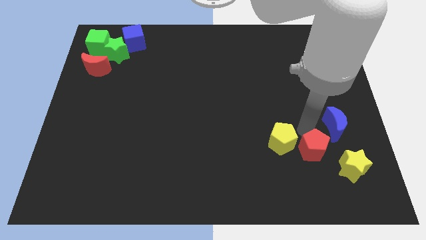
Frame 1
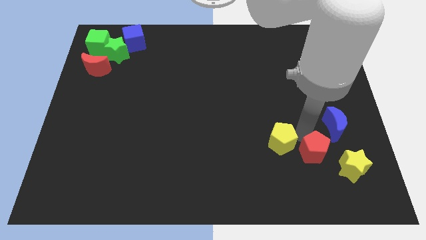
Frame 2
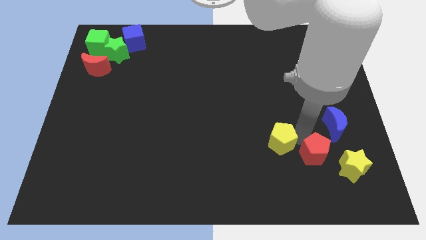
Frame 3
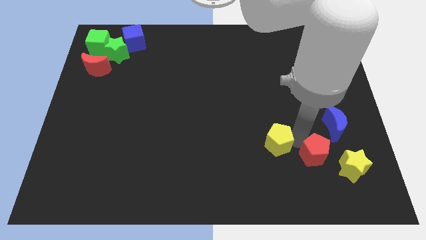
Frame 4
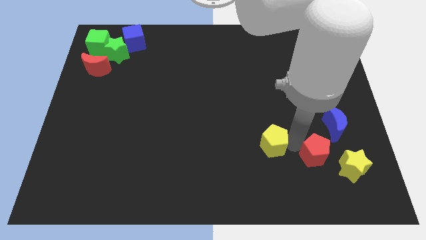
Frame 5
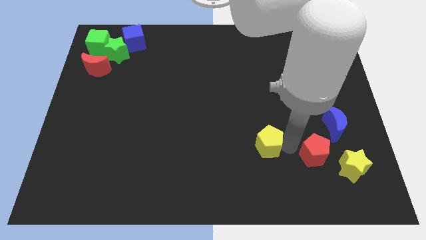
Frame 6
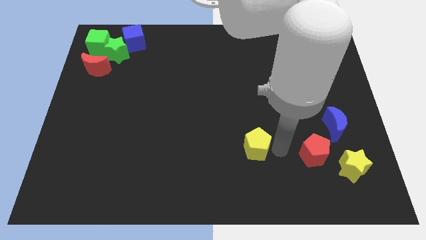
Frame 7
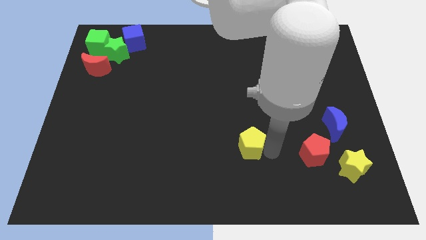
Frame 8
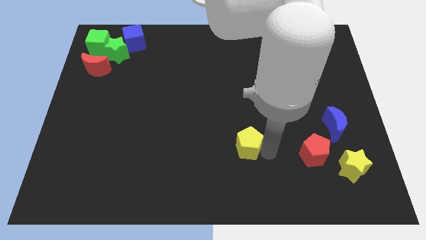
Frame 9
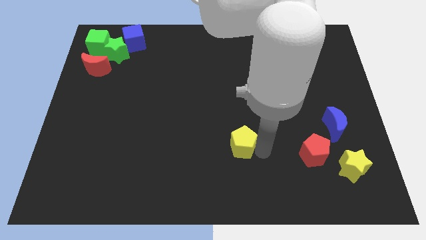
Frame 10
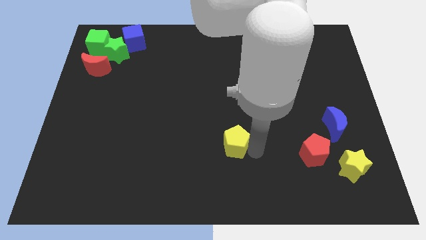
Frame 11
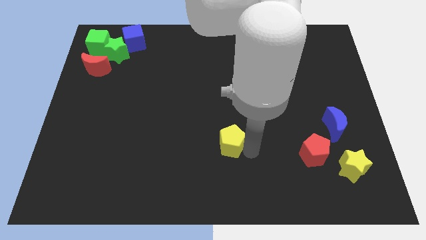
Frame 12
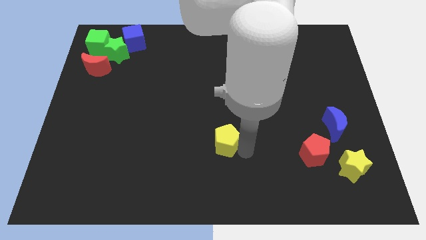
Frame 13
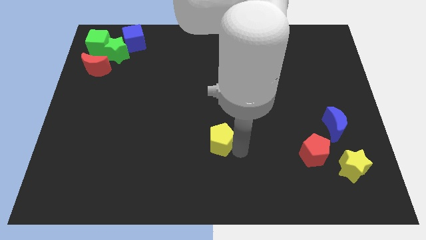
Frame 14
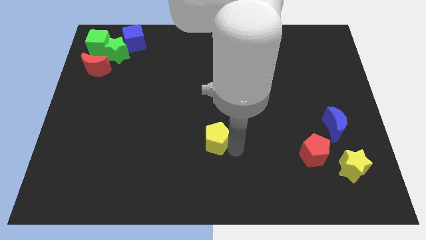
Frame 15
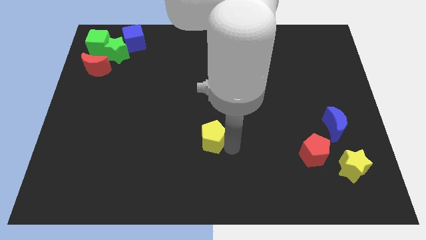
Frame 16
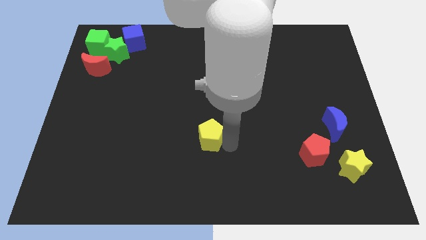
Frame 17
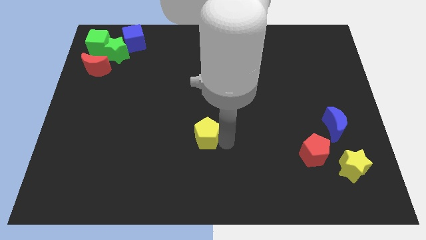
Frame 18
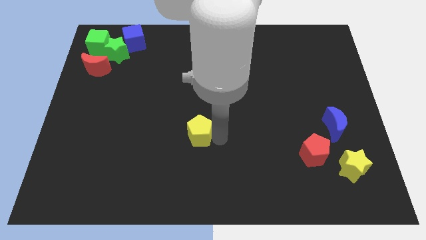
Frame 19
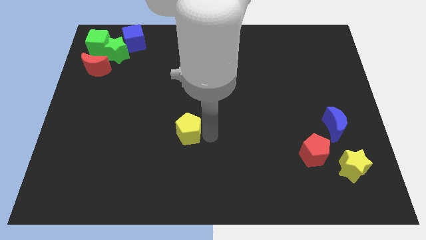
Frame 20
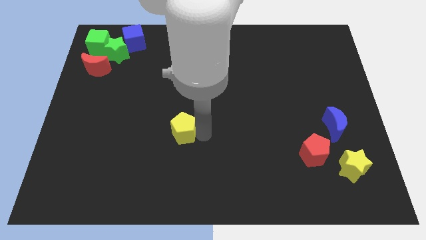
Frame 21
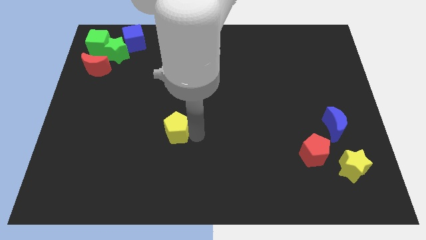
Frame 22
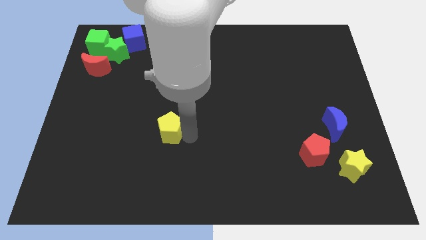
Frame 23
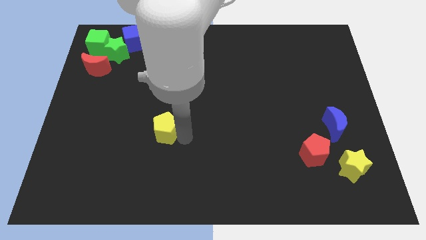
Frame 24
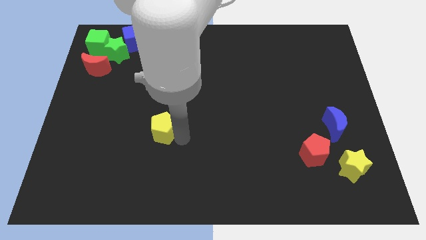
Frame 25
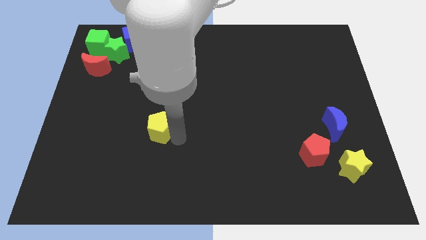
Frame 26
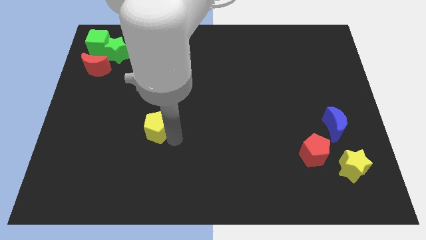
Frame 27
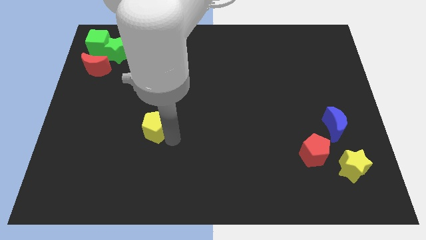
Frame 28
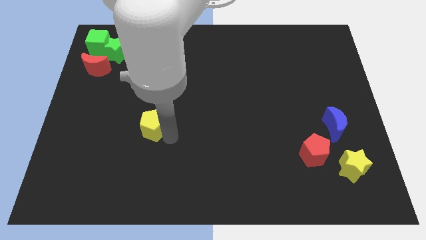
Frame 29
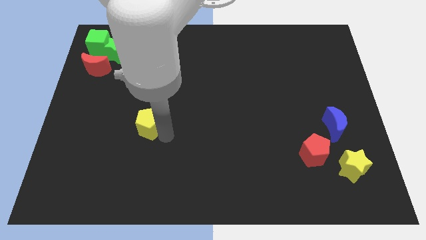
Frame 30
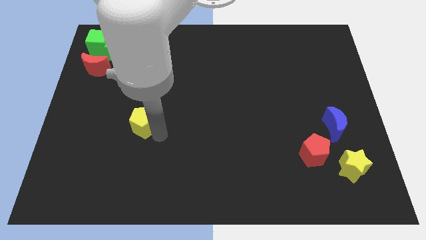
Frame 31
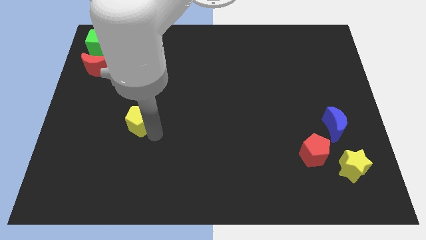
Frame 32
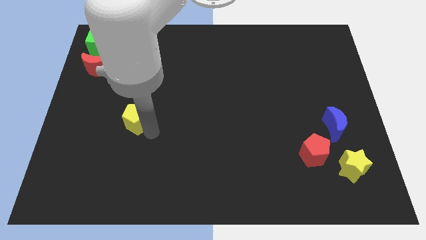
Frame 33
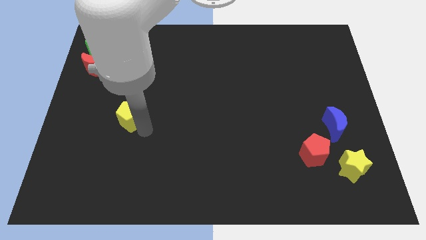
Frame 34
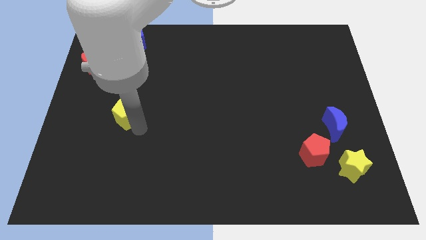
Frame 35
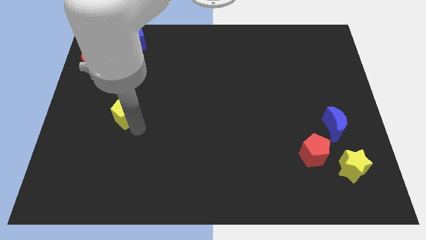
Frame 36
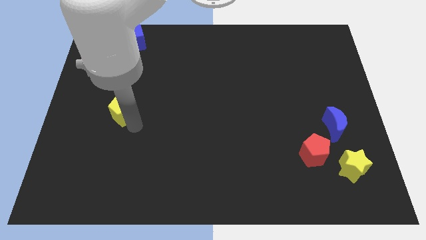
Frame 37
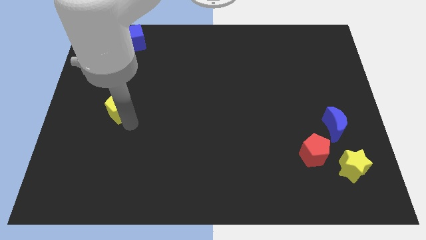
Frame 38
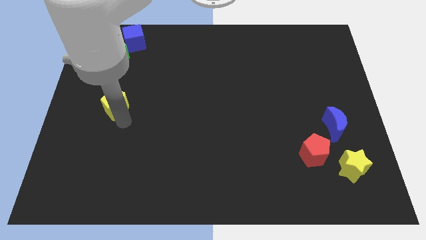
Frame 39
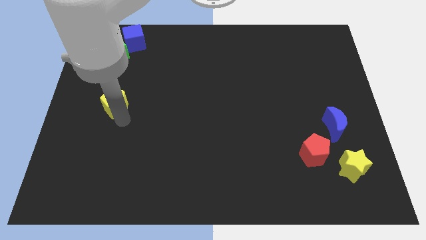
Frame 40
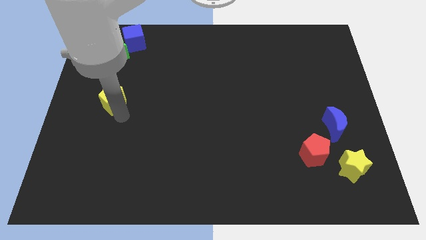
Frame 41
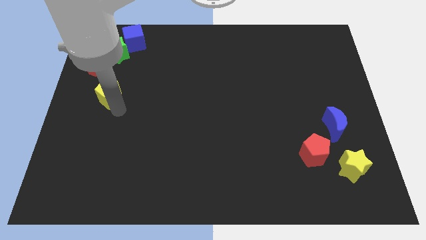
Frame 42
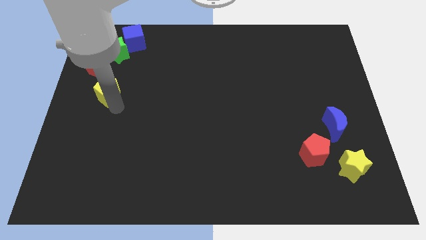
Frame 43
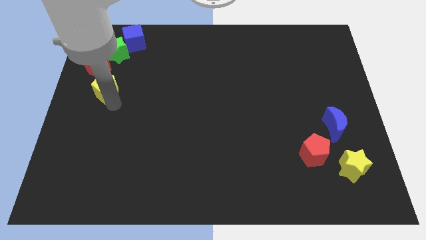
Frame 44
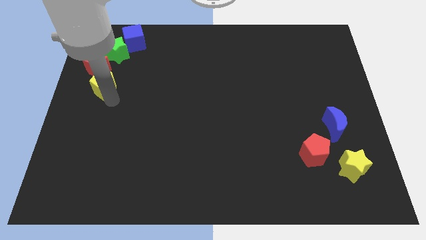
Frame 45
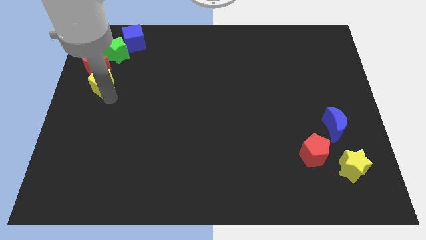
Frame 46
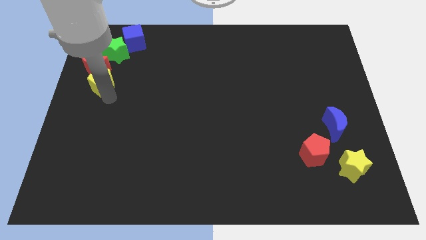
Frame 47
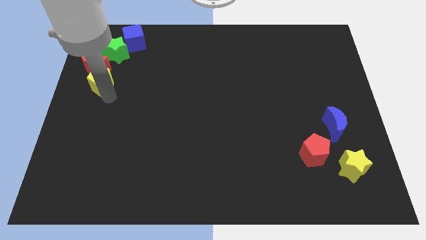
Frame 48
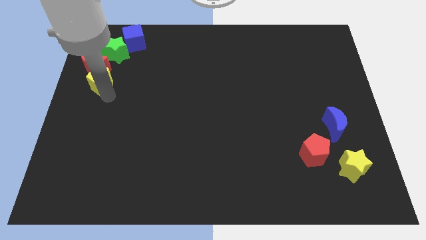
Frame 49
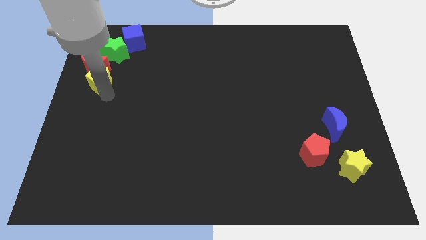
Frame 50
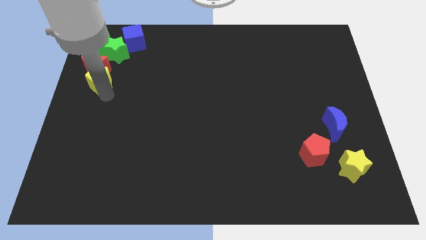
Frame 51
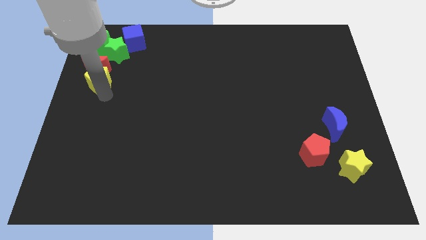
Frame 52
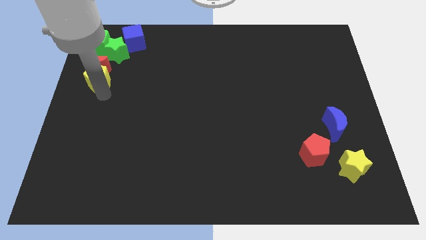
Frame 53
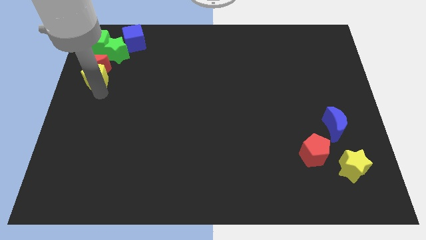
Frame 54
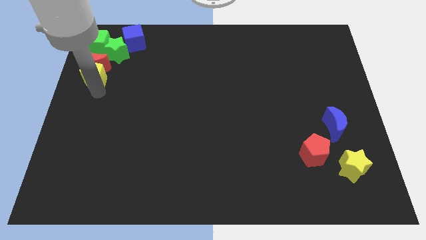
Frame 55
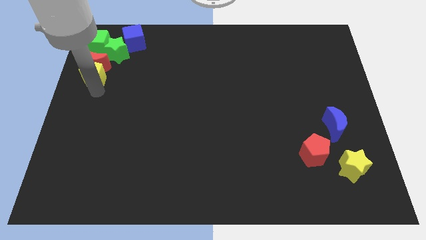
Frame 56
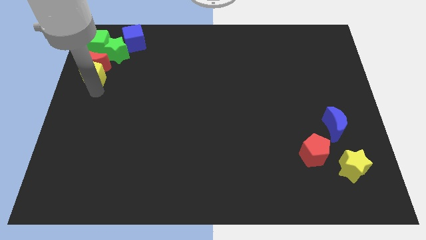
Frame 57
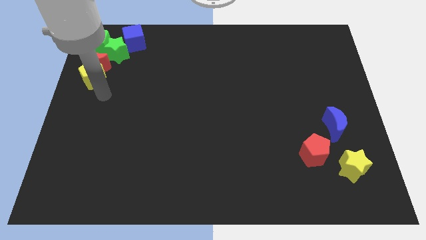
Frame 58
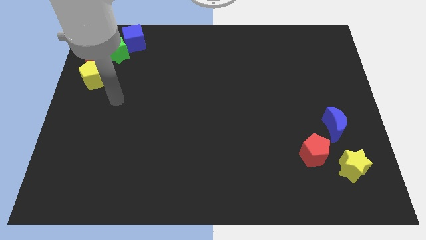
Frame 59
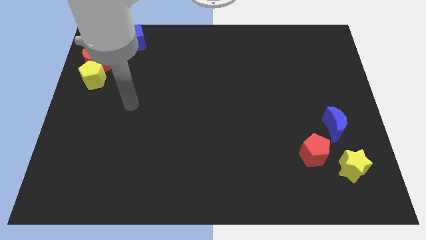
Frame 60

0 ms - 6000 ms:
place the yellow pentagon into the red moon

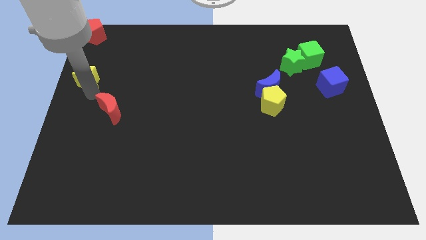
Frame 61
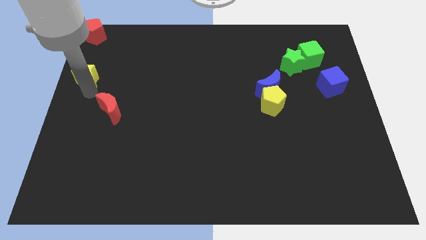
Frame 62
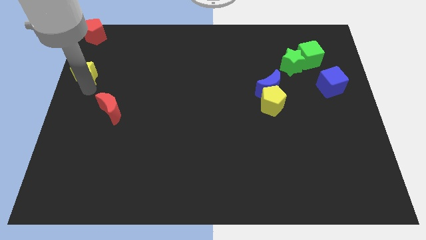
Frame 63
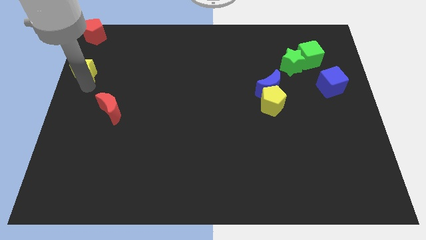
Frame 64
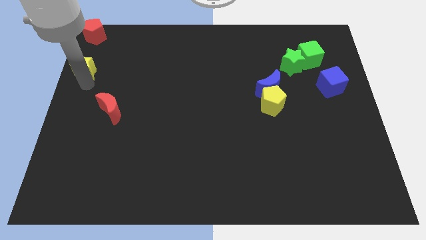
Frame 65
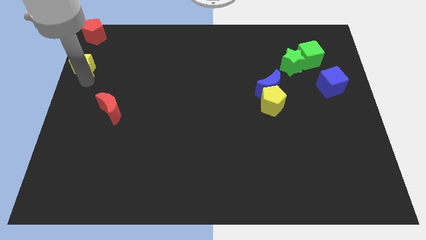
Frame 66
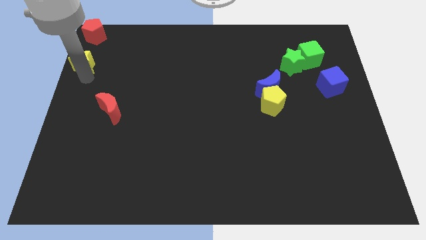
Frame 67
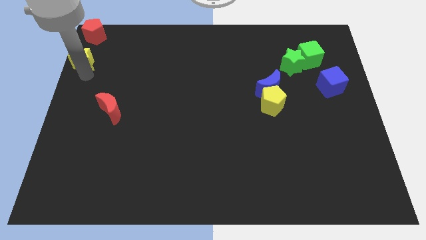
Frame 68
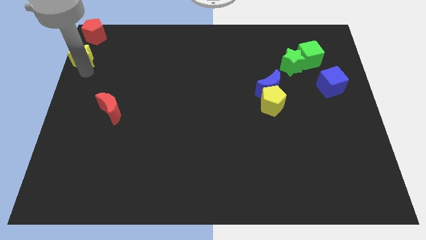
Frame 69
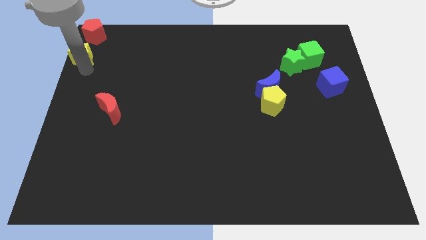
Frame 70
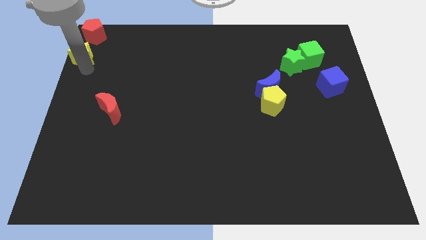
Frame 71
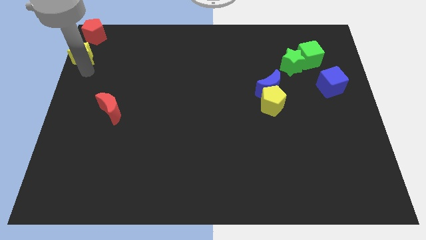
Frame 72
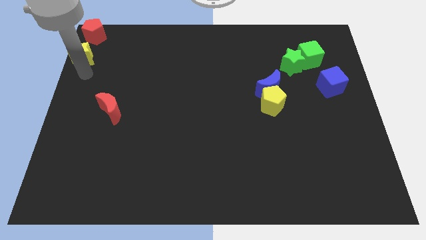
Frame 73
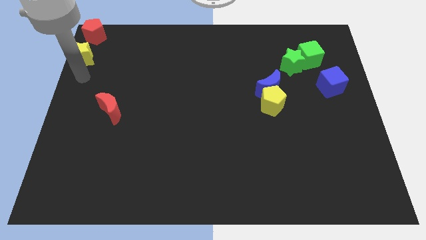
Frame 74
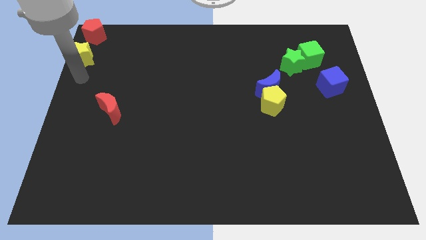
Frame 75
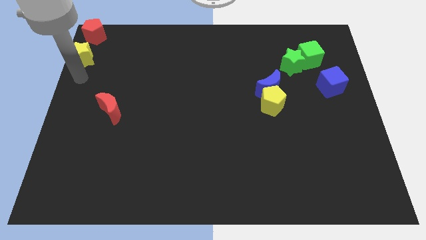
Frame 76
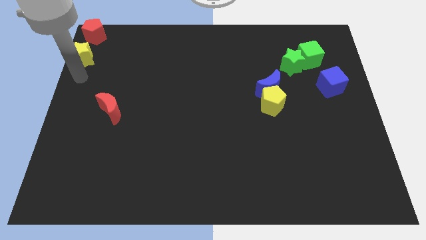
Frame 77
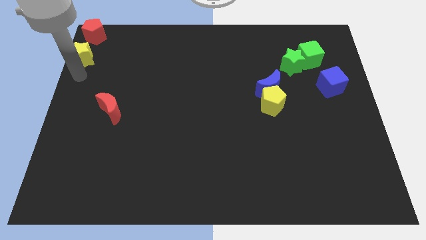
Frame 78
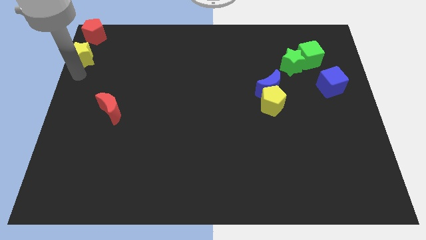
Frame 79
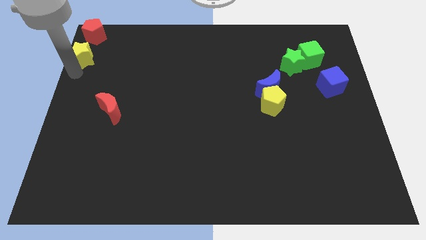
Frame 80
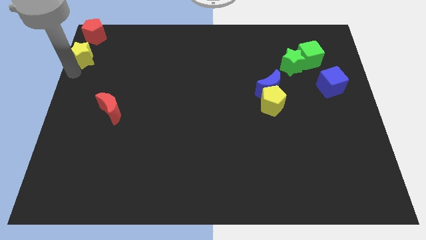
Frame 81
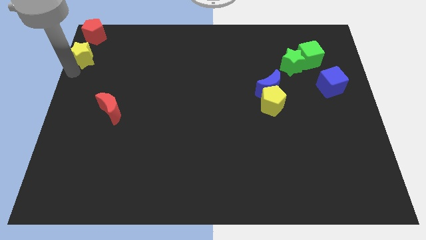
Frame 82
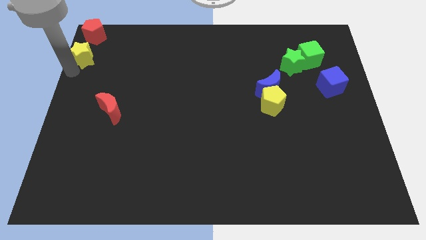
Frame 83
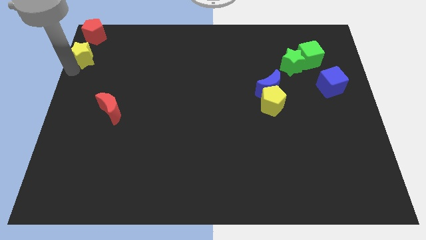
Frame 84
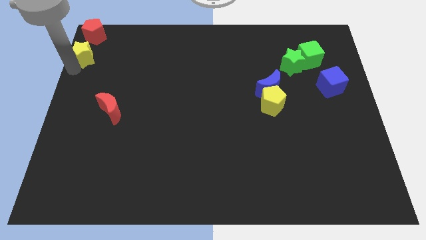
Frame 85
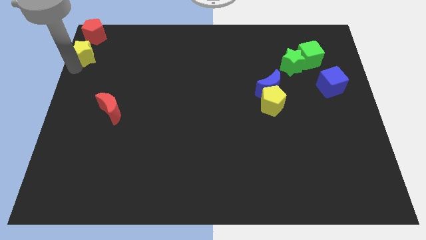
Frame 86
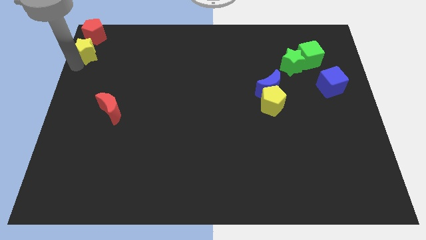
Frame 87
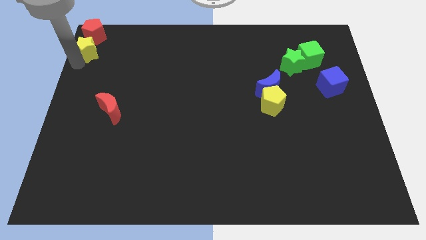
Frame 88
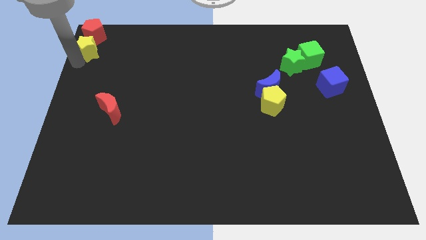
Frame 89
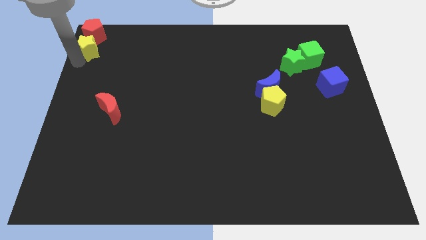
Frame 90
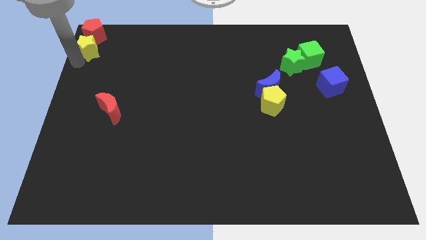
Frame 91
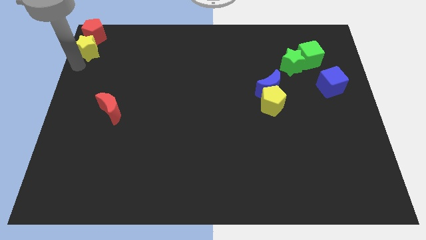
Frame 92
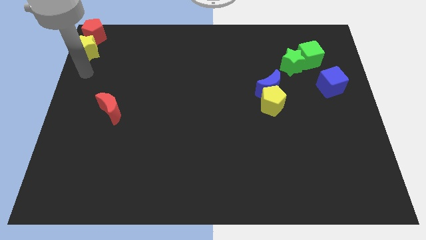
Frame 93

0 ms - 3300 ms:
place the yellow star below red pentagon
